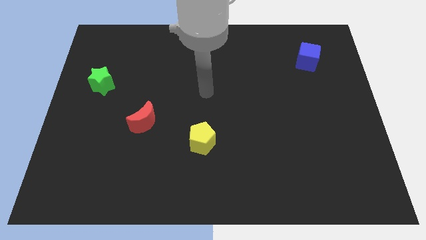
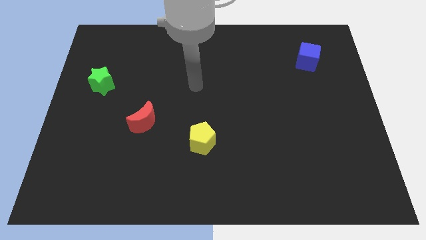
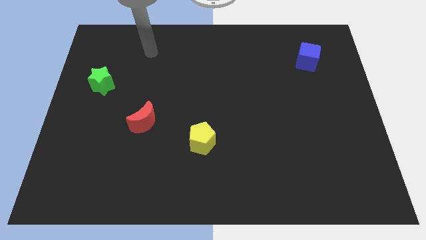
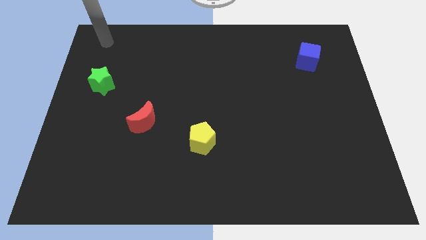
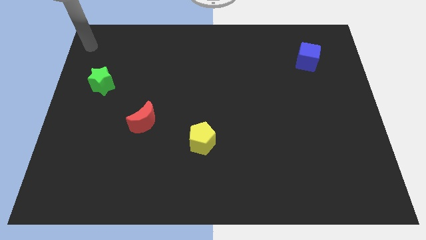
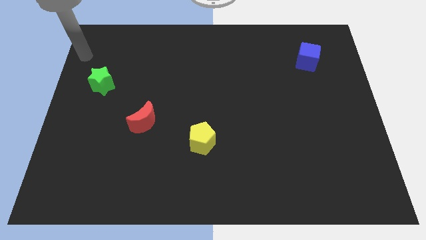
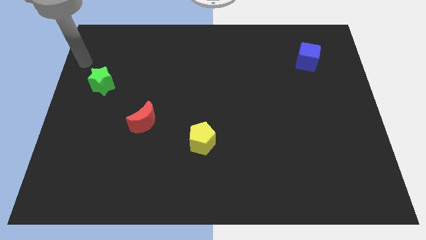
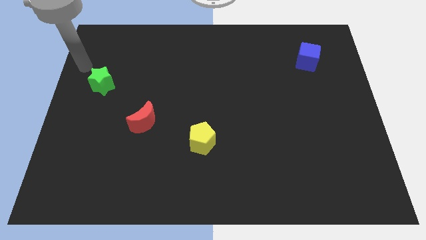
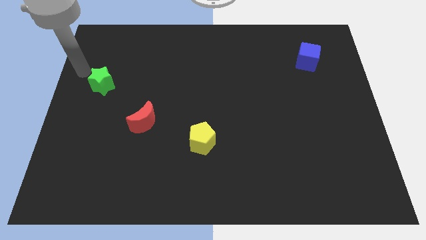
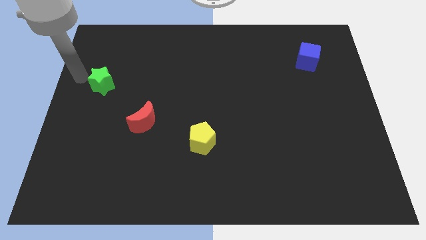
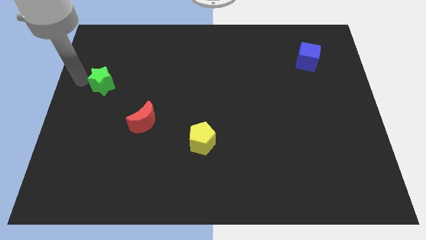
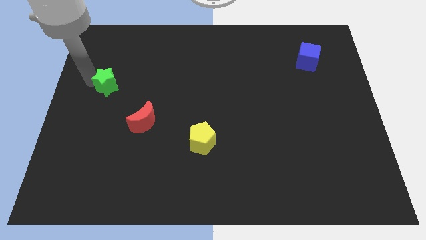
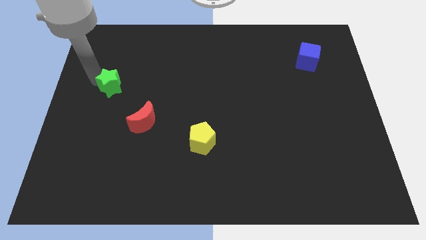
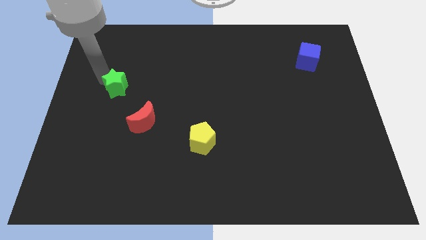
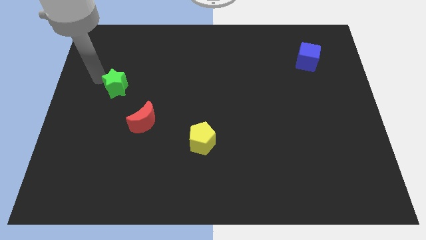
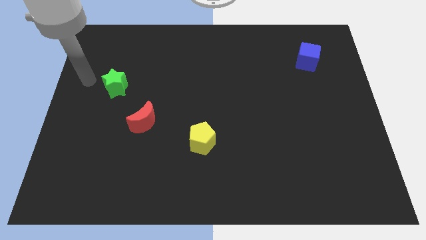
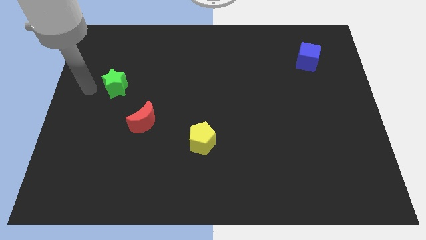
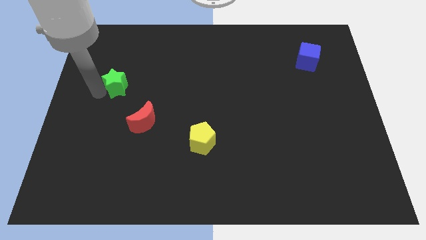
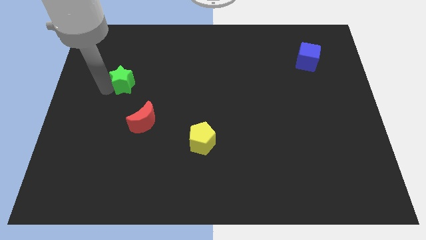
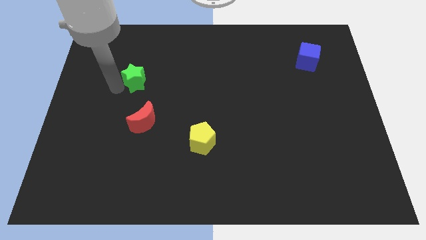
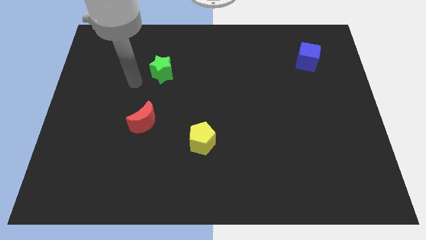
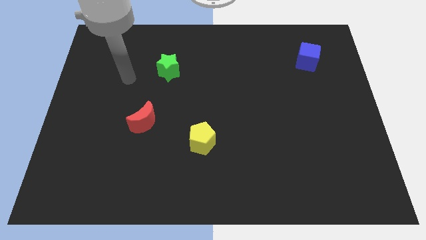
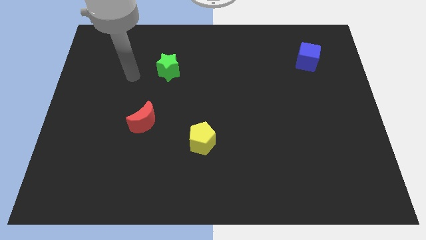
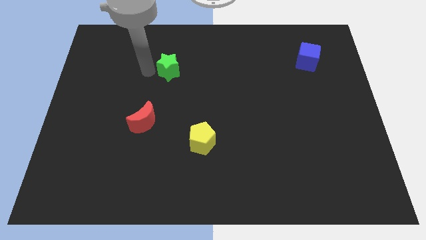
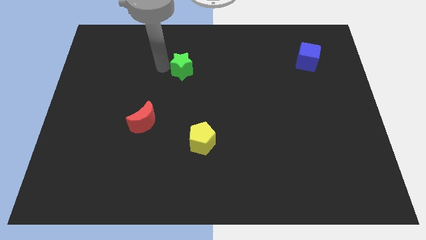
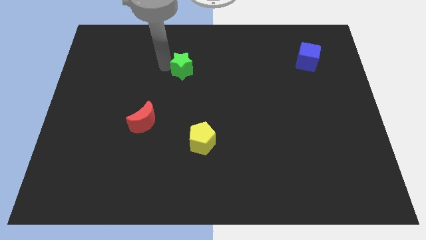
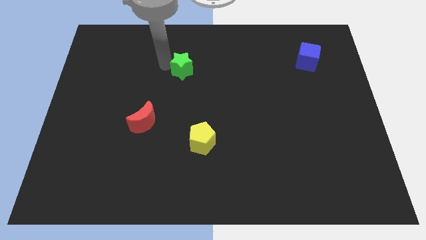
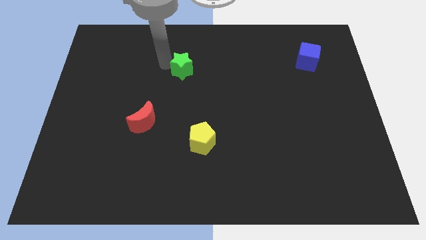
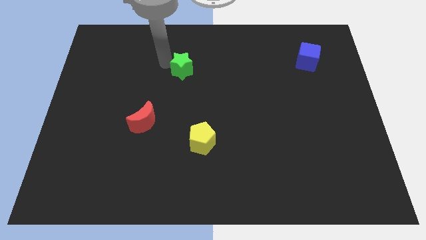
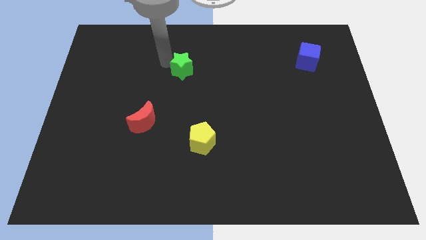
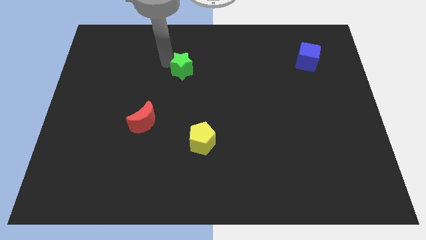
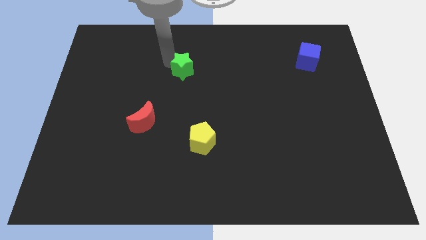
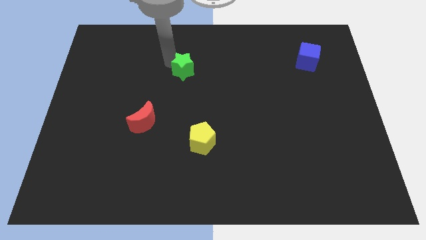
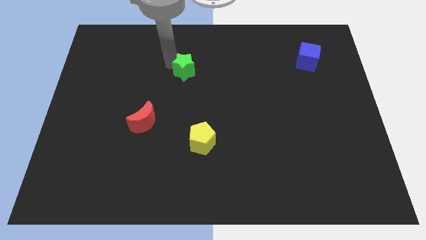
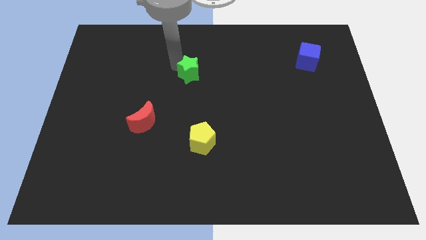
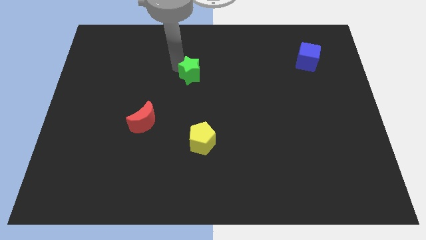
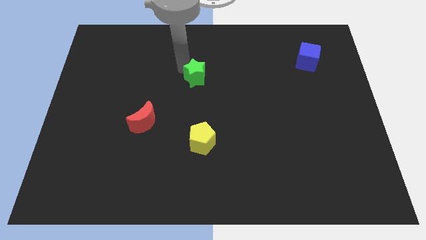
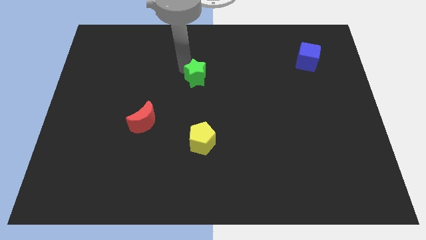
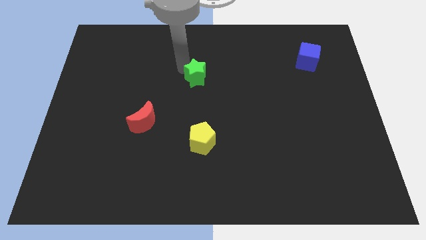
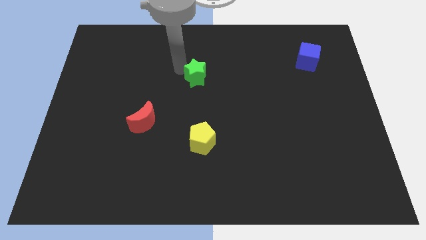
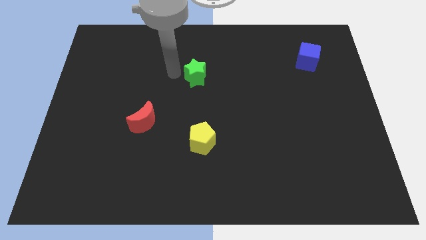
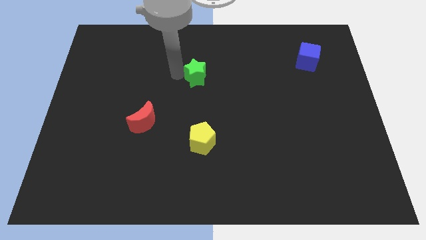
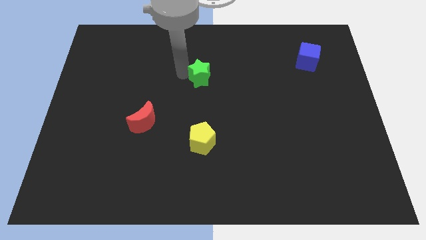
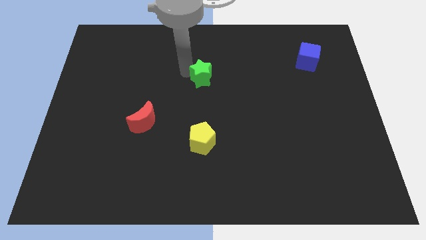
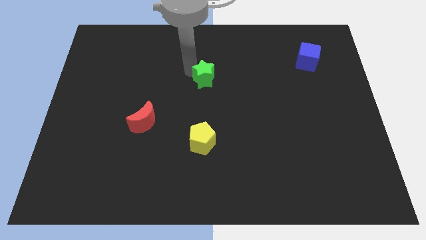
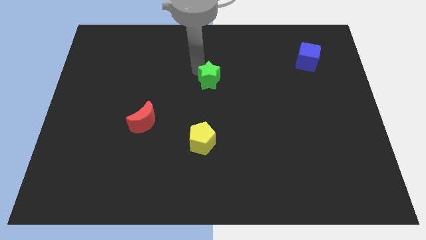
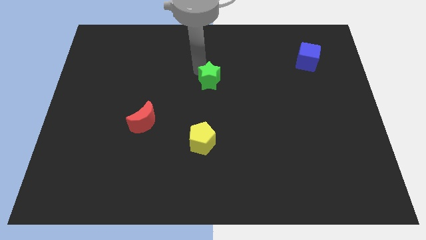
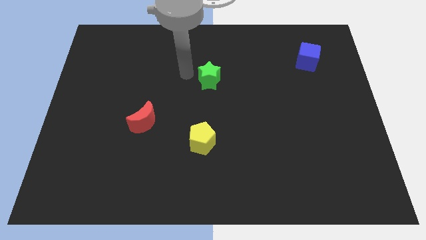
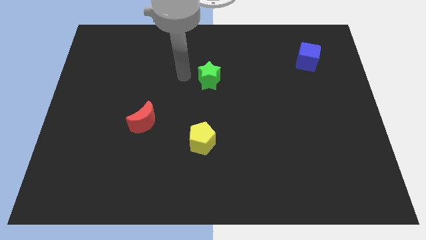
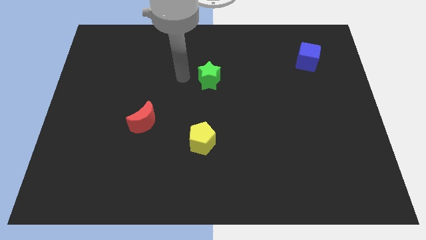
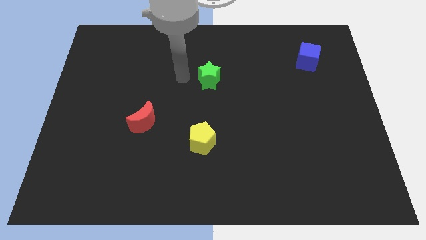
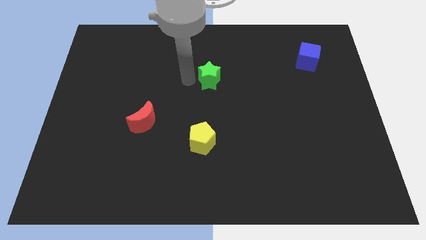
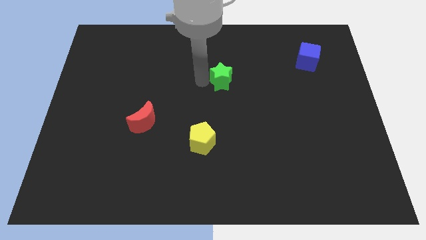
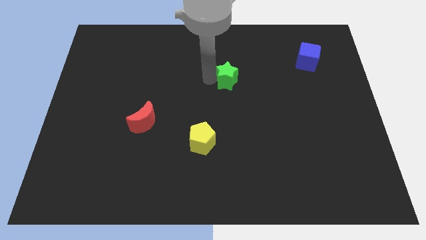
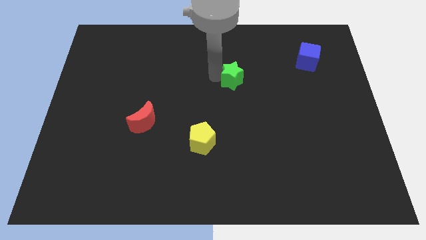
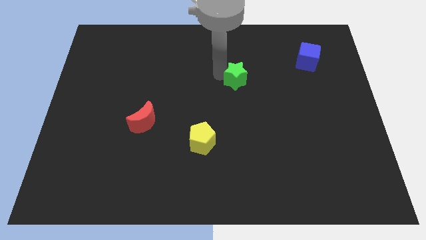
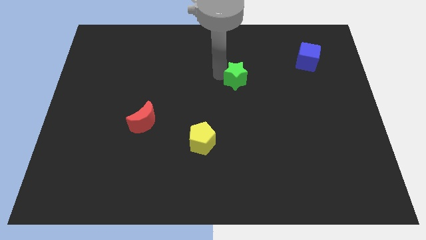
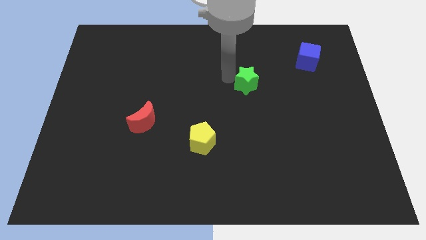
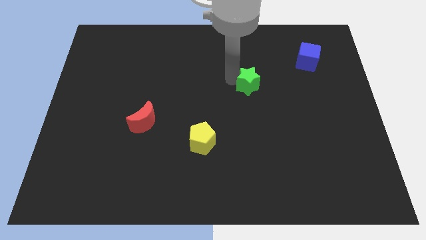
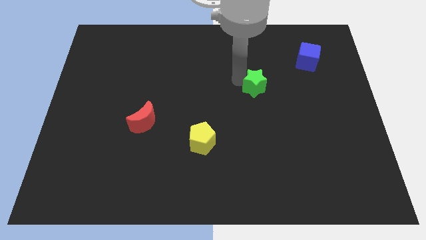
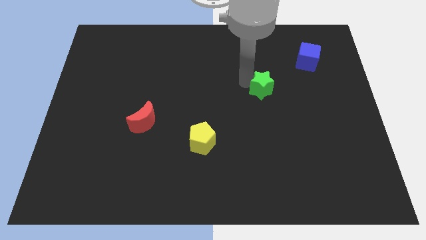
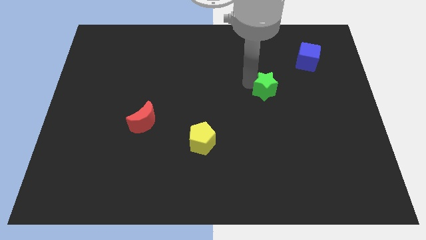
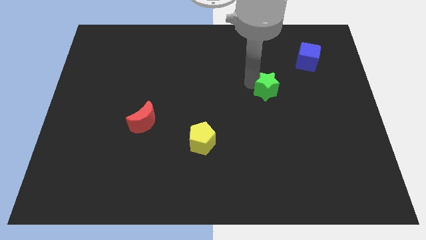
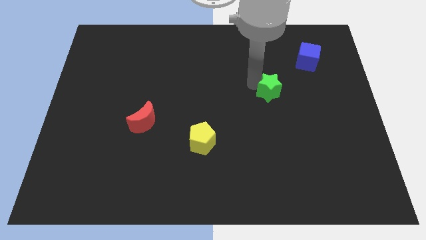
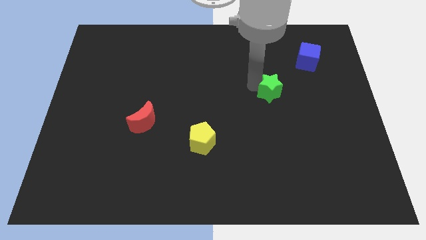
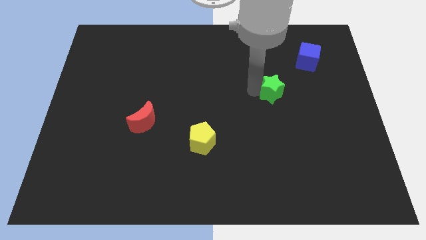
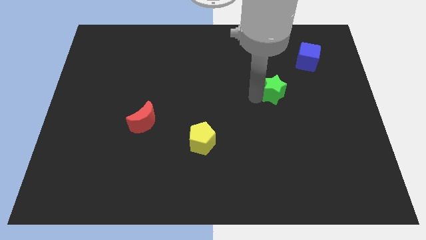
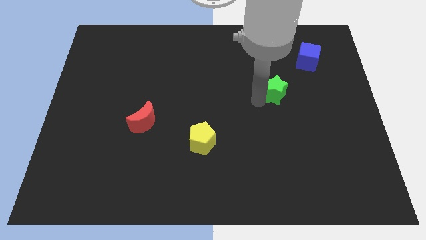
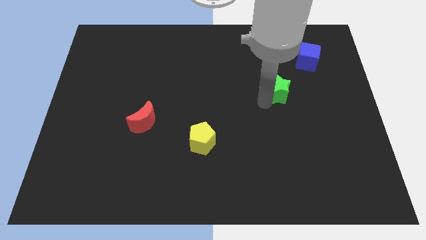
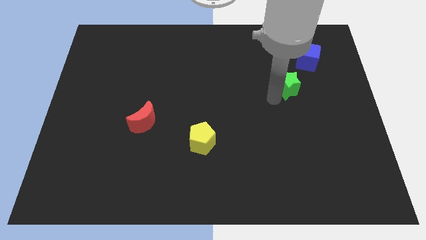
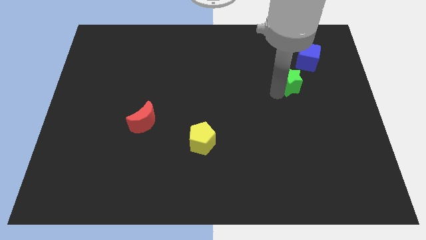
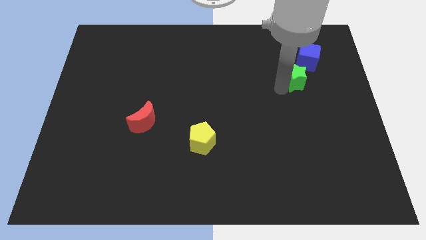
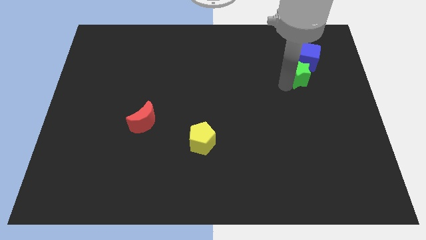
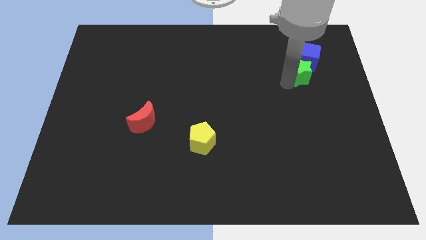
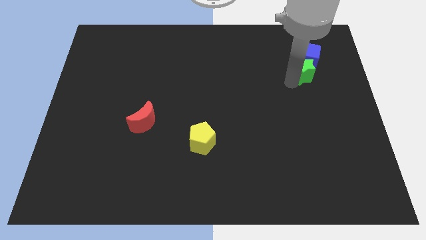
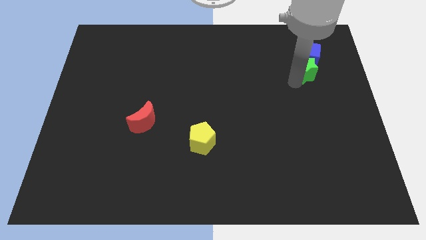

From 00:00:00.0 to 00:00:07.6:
slide the green star towards the blue block

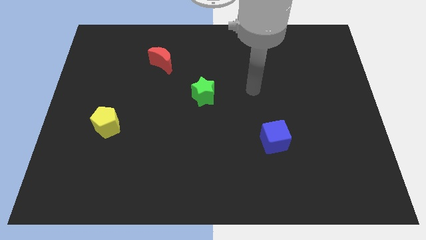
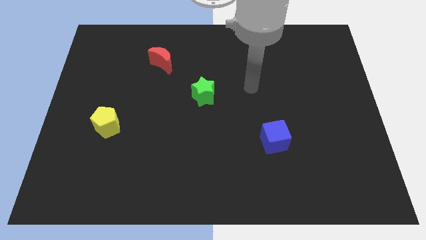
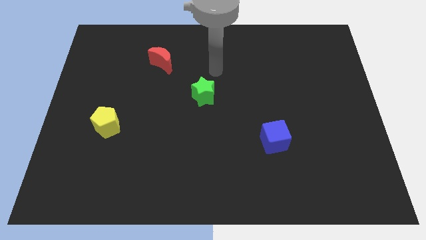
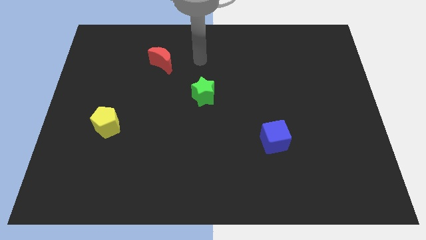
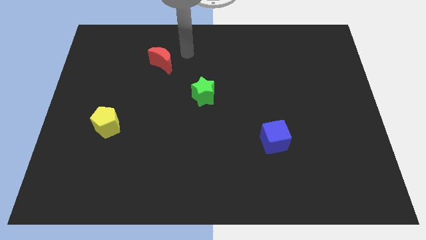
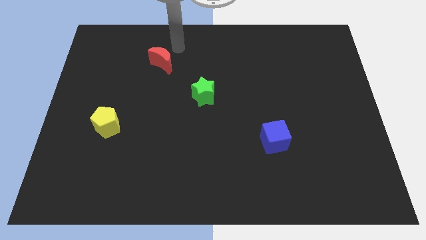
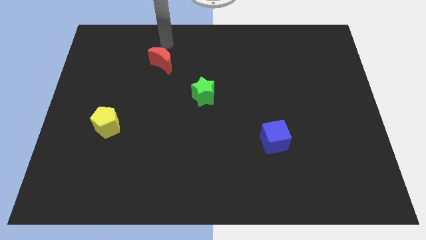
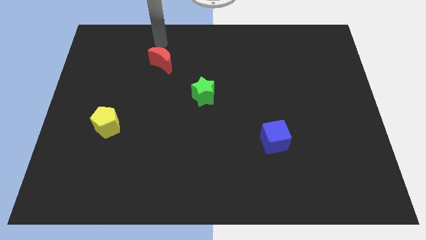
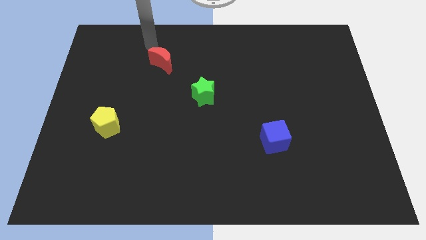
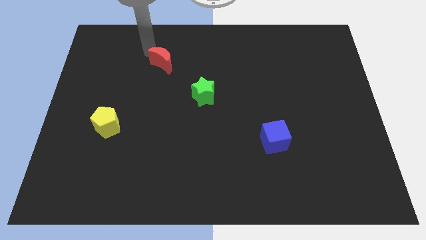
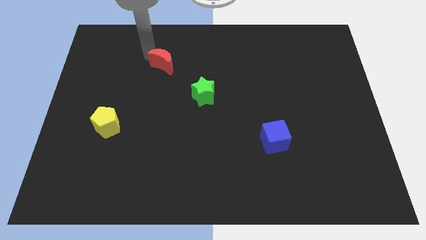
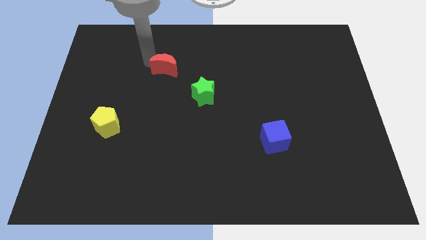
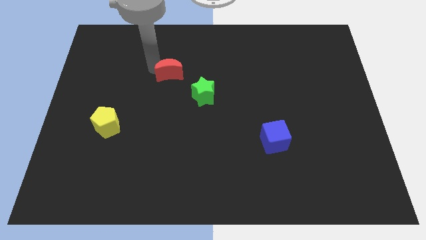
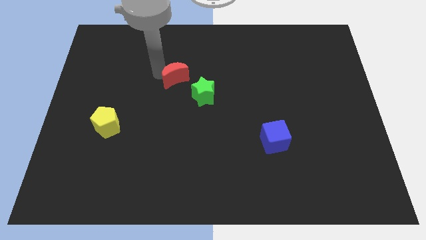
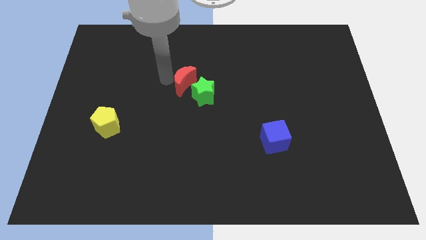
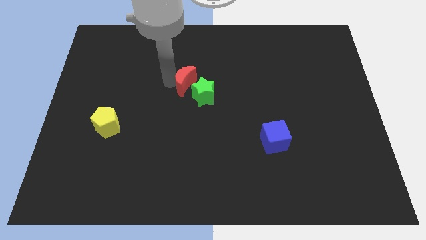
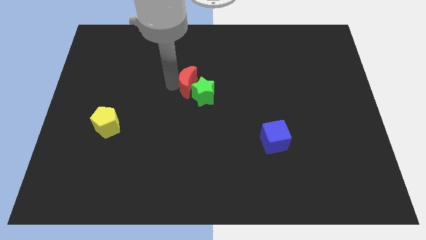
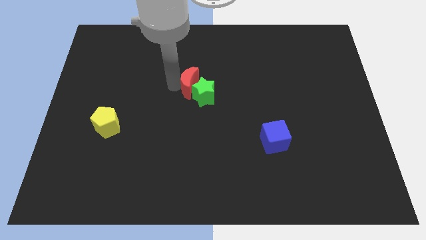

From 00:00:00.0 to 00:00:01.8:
push the red block next to the star
